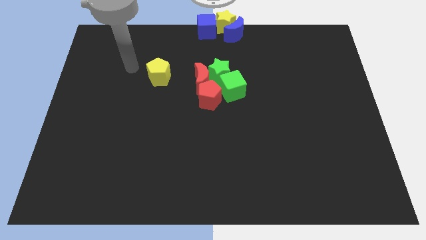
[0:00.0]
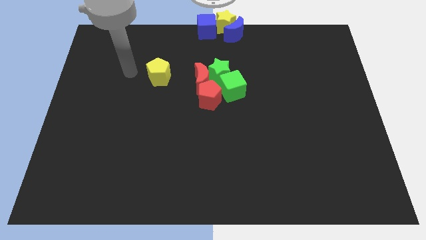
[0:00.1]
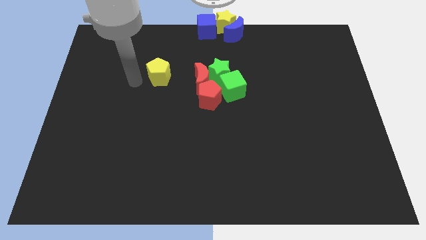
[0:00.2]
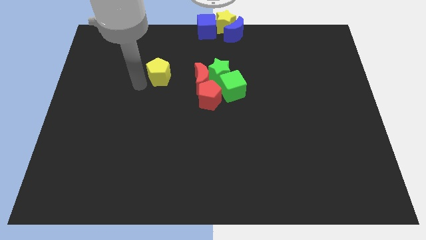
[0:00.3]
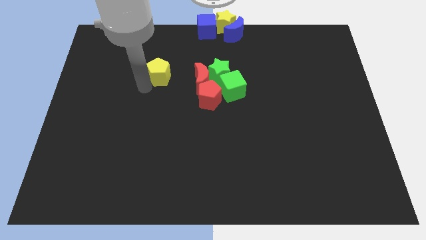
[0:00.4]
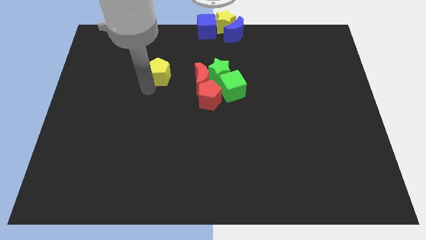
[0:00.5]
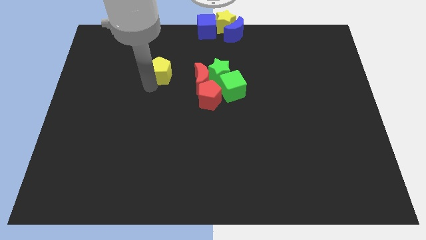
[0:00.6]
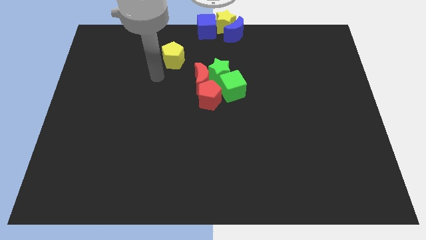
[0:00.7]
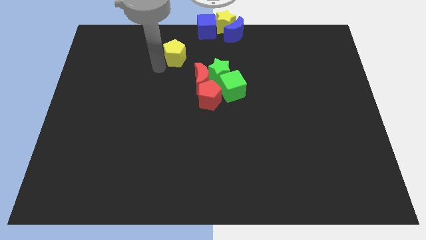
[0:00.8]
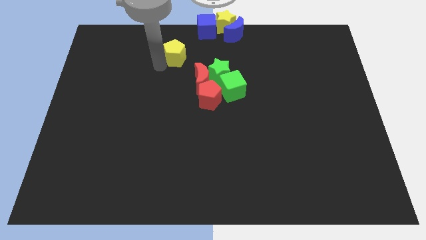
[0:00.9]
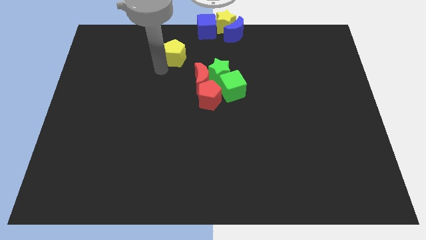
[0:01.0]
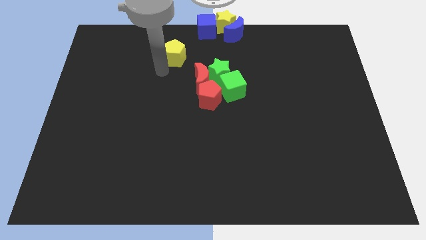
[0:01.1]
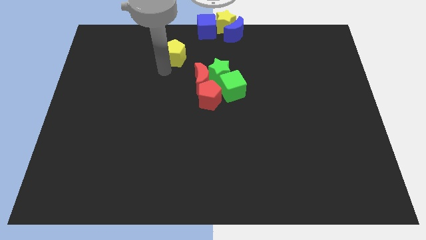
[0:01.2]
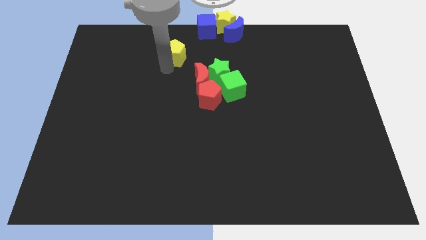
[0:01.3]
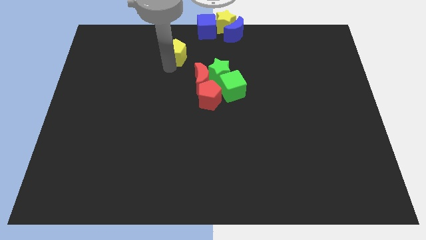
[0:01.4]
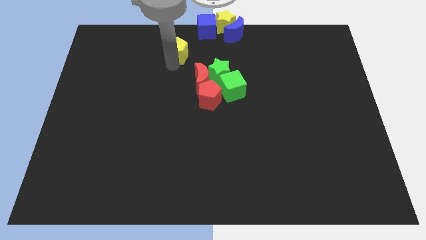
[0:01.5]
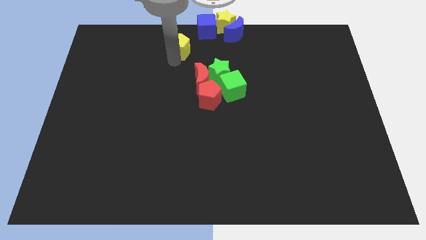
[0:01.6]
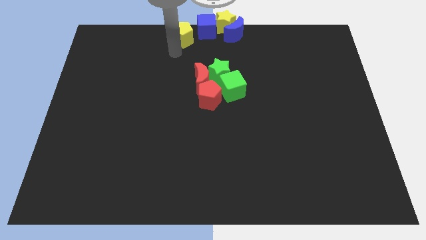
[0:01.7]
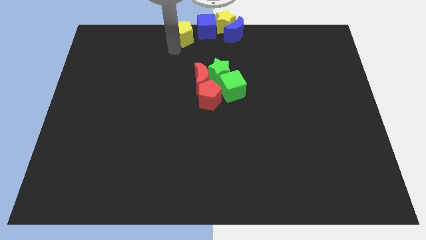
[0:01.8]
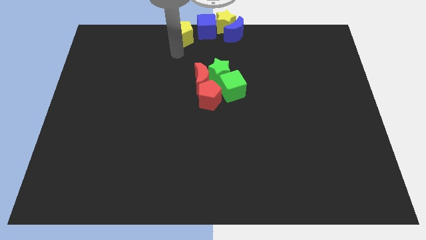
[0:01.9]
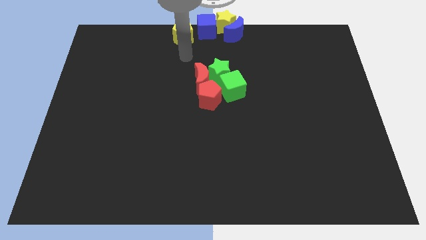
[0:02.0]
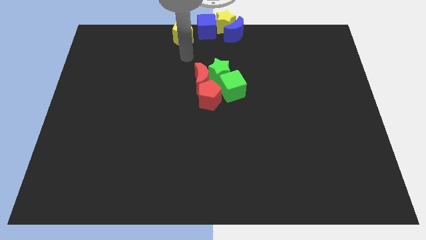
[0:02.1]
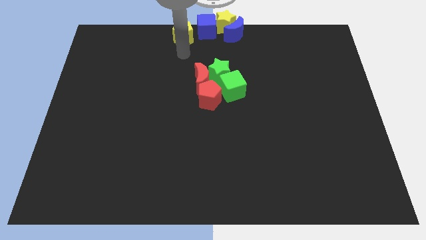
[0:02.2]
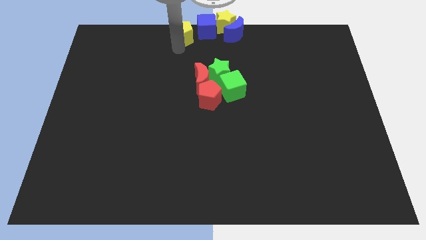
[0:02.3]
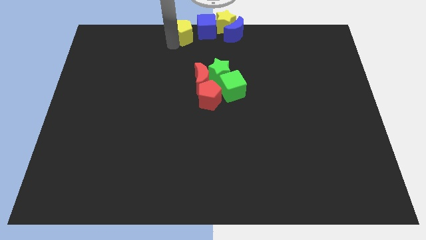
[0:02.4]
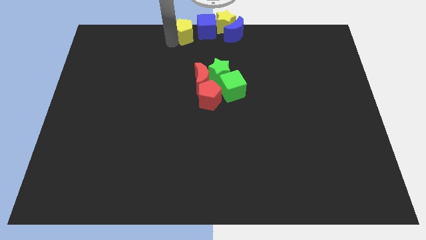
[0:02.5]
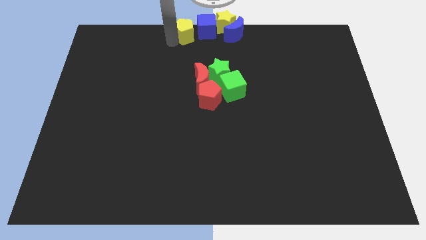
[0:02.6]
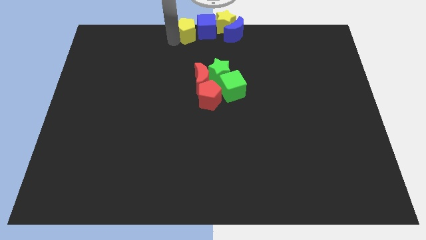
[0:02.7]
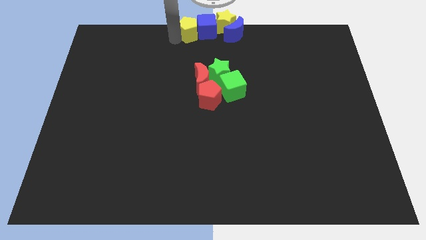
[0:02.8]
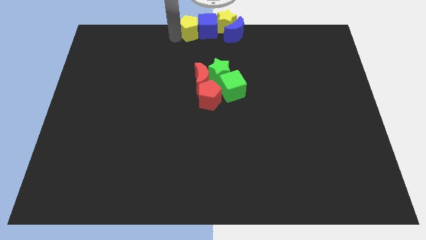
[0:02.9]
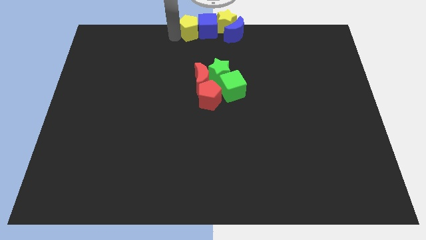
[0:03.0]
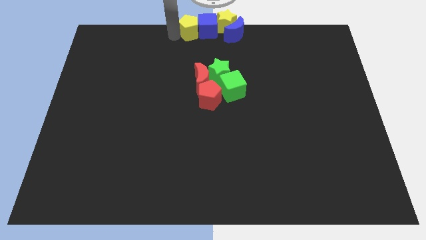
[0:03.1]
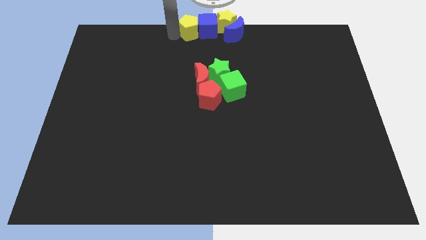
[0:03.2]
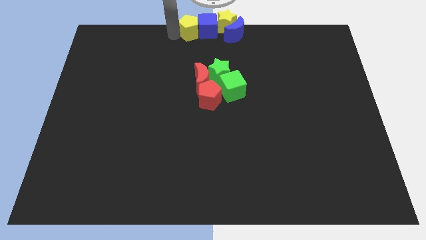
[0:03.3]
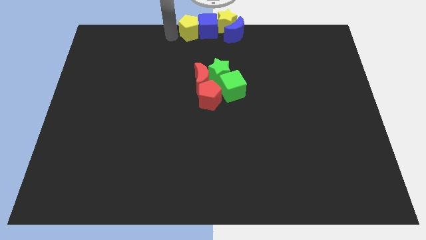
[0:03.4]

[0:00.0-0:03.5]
move the yellow pentagon to the left of the blue cube

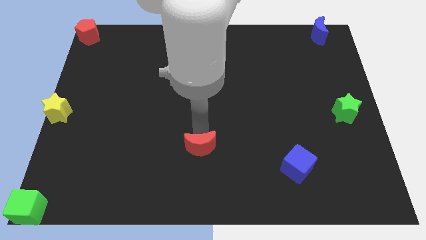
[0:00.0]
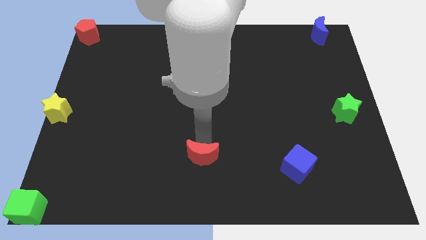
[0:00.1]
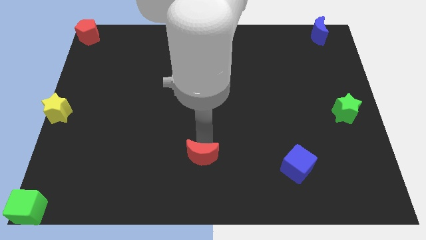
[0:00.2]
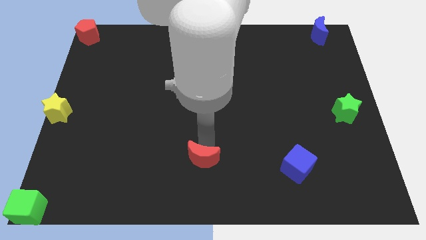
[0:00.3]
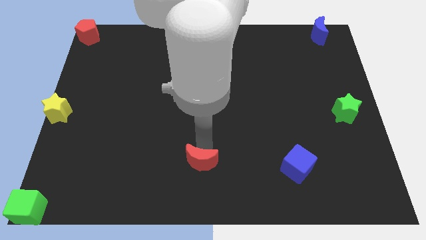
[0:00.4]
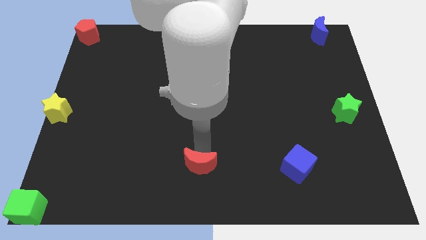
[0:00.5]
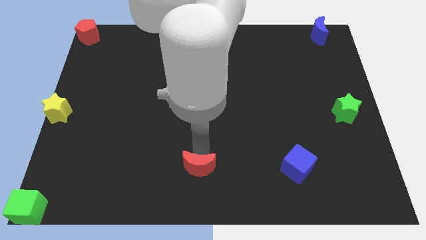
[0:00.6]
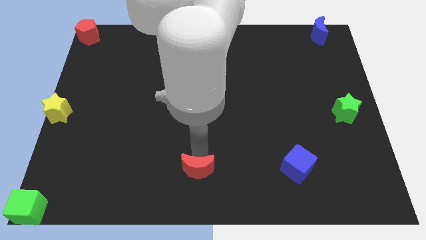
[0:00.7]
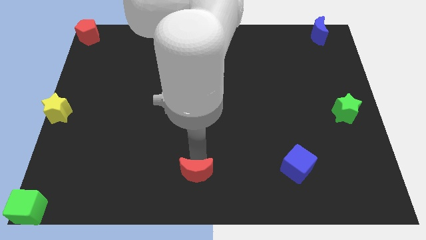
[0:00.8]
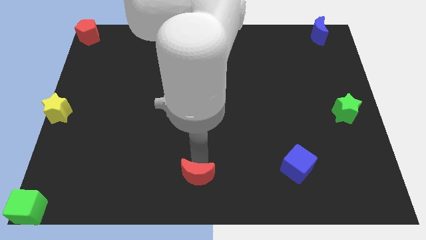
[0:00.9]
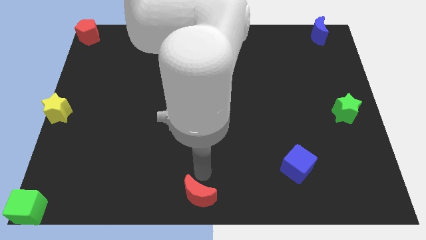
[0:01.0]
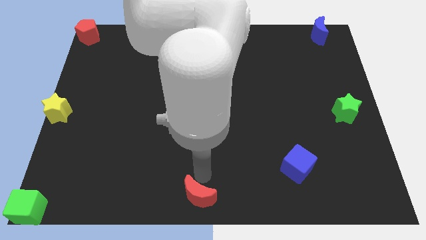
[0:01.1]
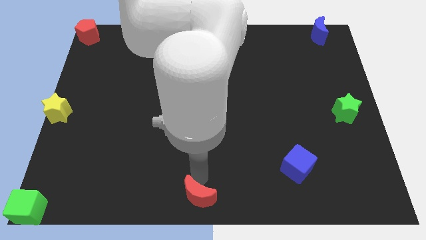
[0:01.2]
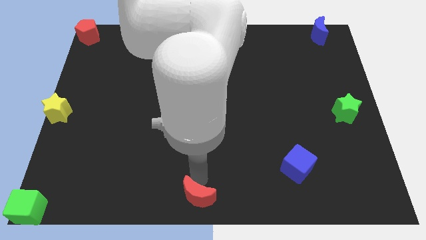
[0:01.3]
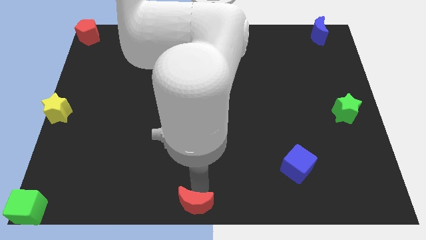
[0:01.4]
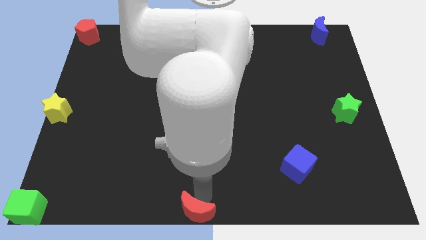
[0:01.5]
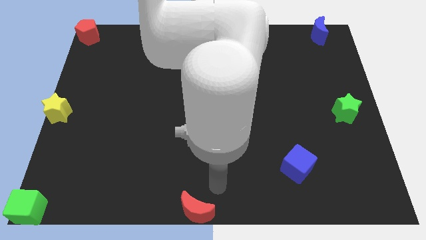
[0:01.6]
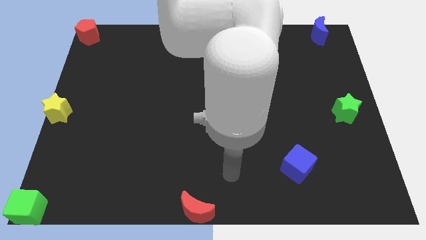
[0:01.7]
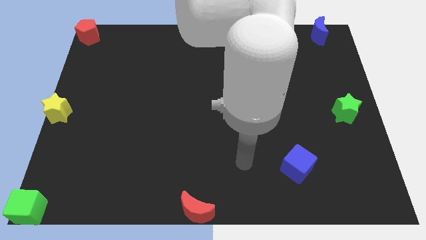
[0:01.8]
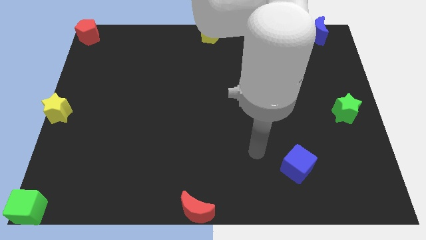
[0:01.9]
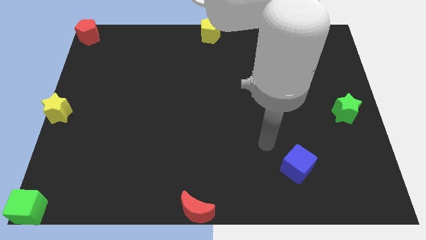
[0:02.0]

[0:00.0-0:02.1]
slide red moon to the bottom center

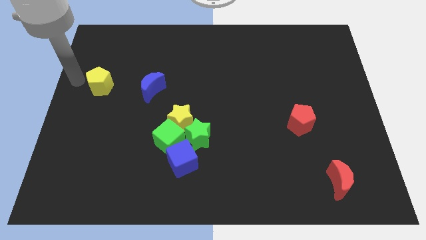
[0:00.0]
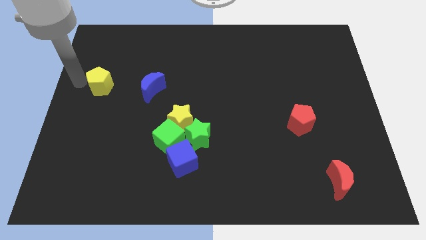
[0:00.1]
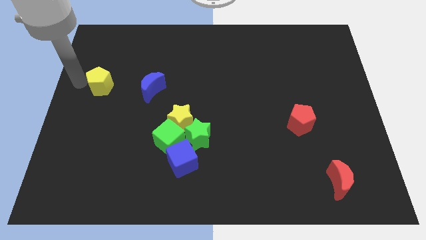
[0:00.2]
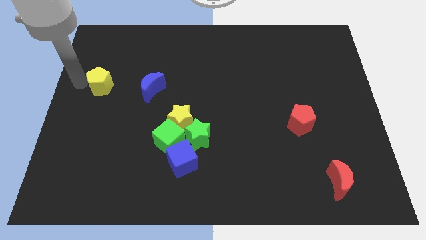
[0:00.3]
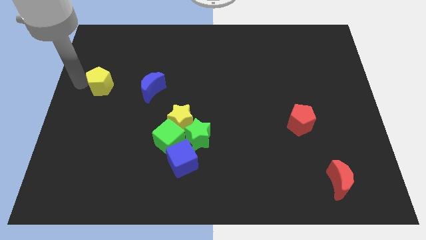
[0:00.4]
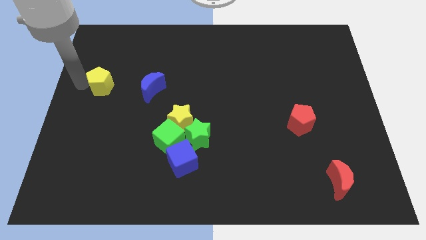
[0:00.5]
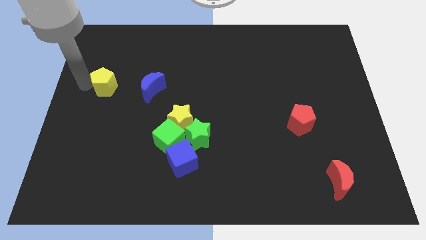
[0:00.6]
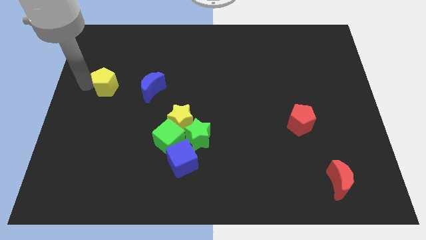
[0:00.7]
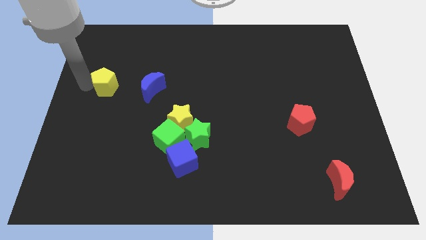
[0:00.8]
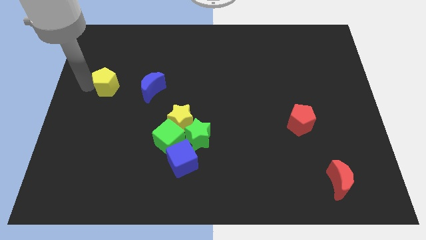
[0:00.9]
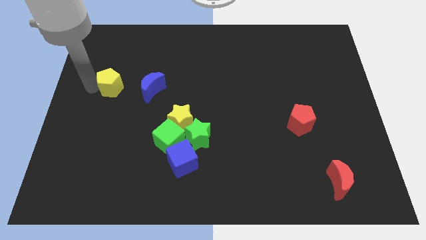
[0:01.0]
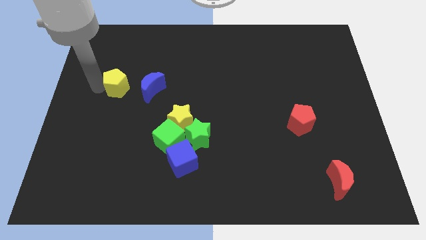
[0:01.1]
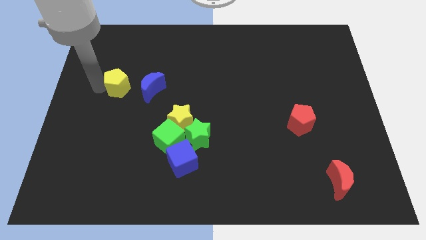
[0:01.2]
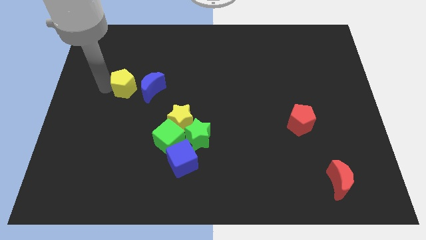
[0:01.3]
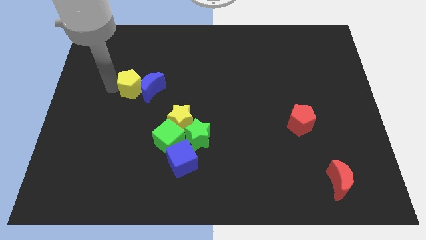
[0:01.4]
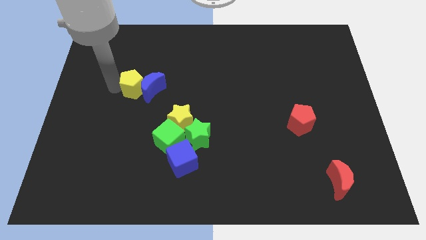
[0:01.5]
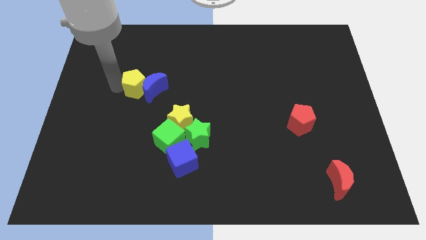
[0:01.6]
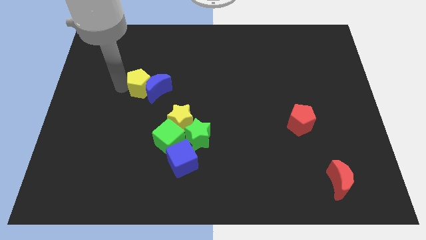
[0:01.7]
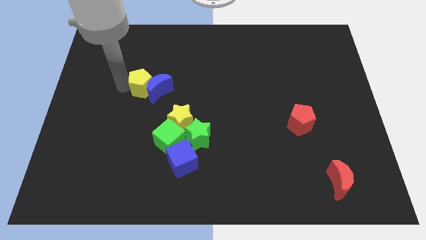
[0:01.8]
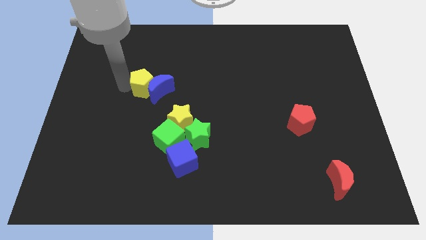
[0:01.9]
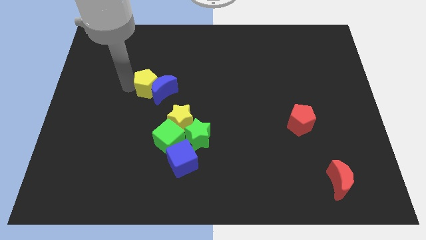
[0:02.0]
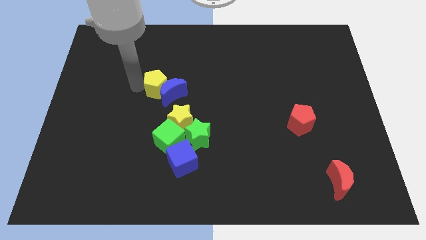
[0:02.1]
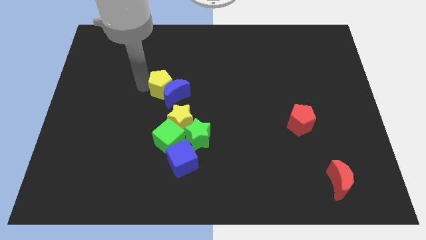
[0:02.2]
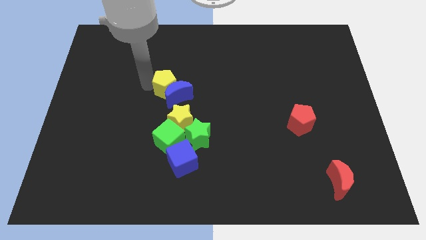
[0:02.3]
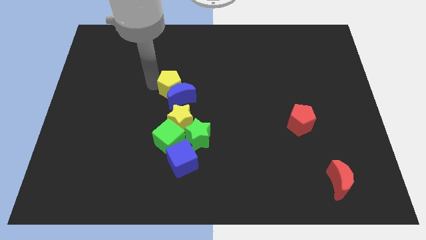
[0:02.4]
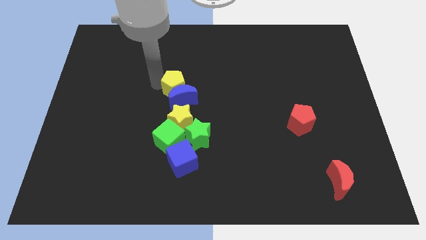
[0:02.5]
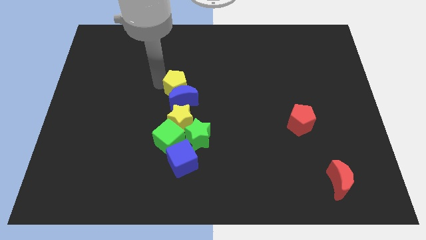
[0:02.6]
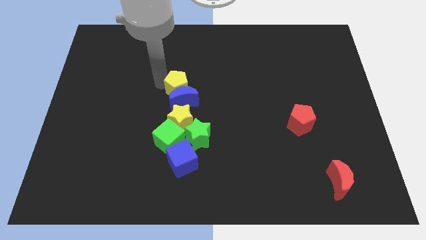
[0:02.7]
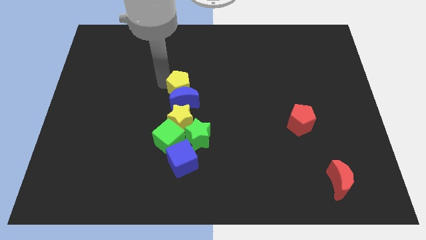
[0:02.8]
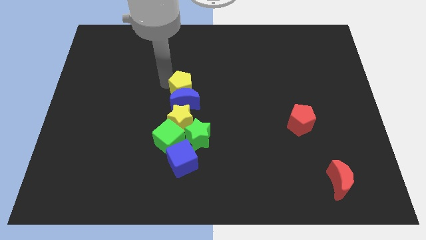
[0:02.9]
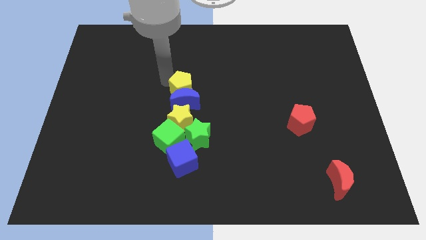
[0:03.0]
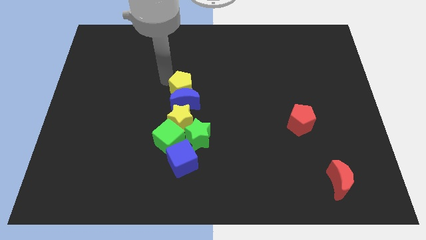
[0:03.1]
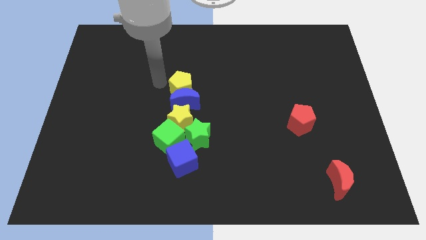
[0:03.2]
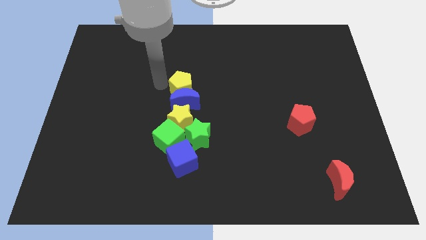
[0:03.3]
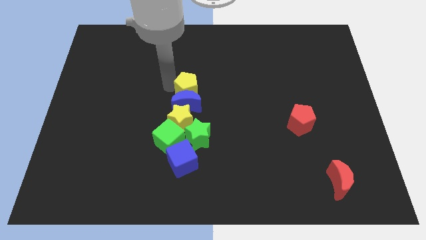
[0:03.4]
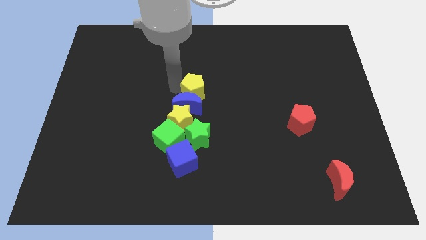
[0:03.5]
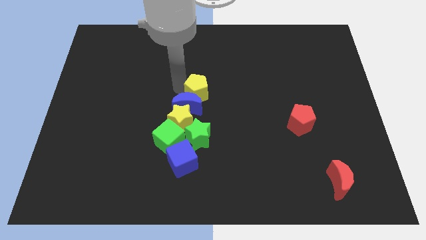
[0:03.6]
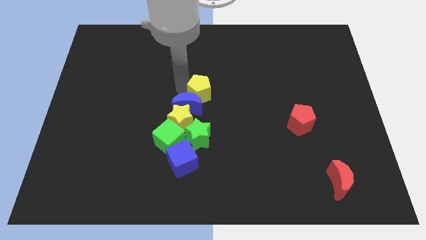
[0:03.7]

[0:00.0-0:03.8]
move the yellow pentagon and blue cube to the top of the yellow star
